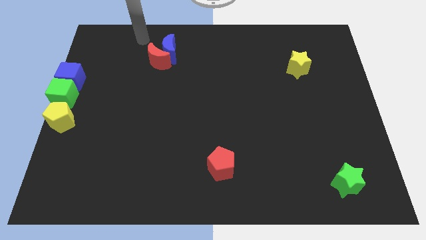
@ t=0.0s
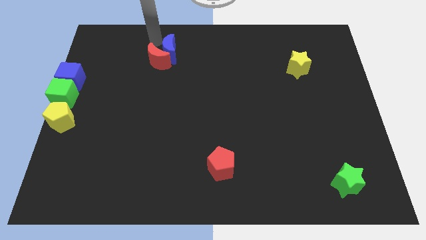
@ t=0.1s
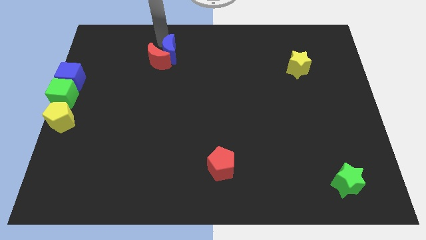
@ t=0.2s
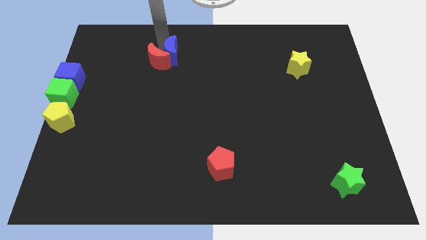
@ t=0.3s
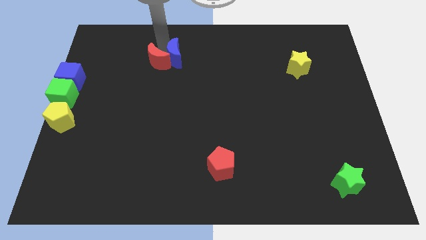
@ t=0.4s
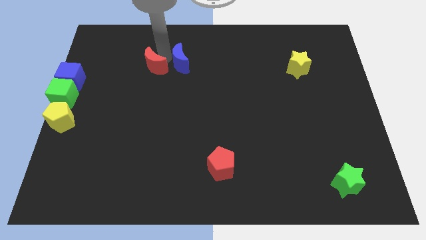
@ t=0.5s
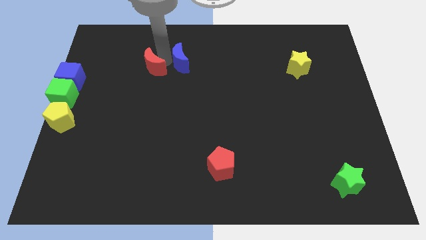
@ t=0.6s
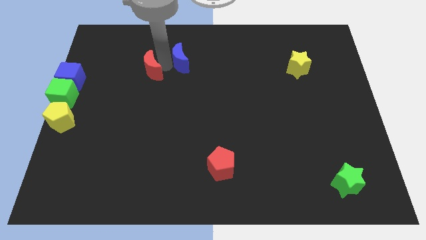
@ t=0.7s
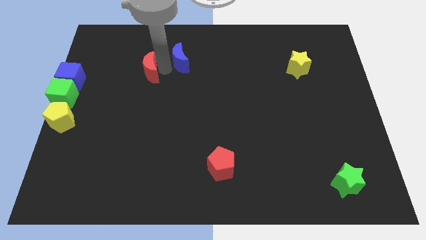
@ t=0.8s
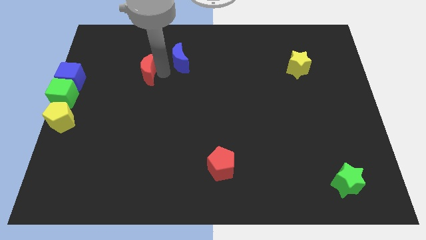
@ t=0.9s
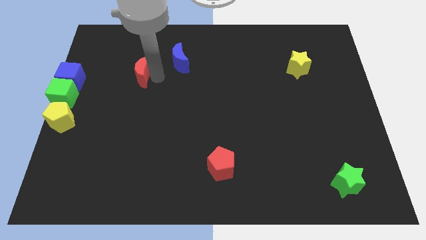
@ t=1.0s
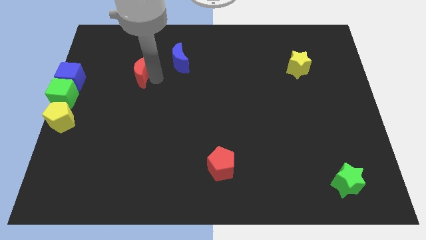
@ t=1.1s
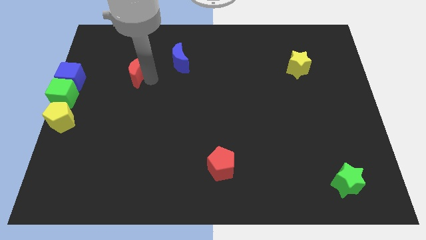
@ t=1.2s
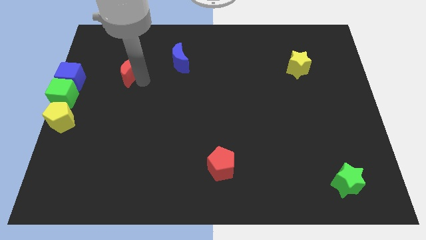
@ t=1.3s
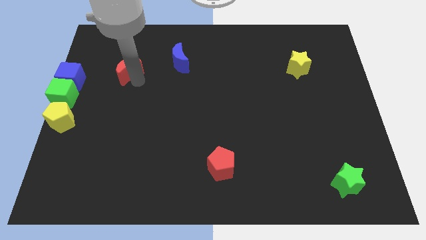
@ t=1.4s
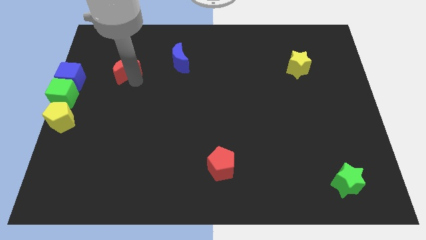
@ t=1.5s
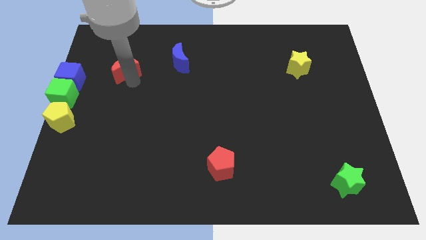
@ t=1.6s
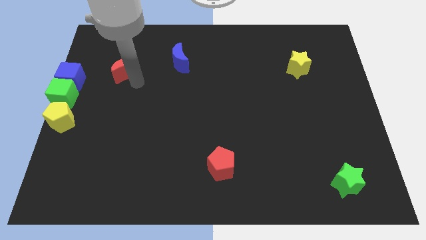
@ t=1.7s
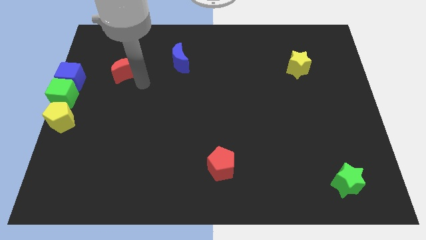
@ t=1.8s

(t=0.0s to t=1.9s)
separate red crescent from blue crescent

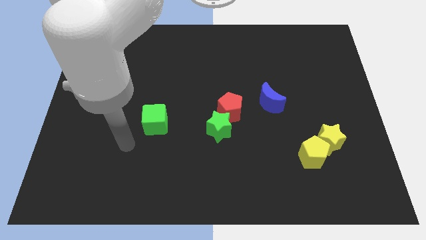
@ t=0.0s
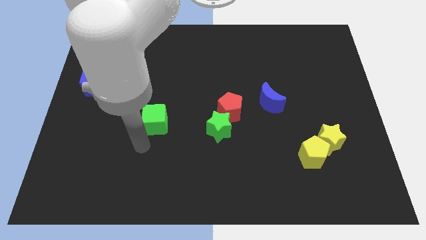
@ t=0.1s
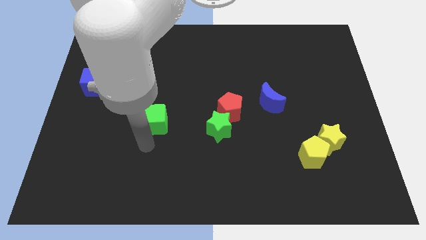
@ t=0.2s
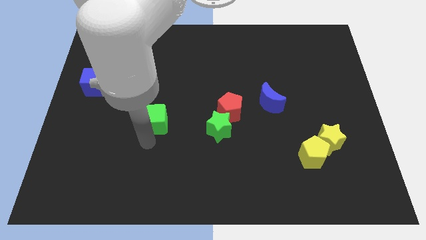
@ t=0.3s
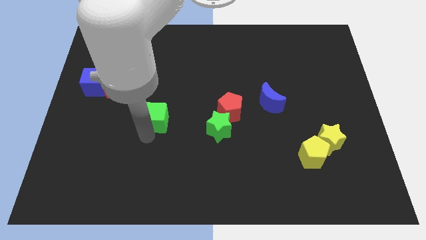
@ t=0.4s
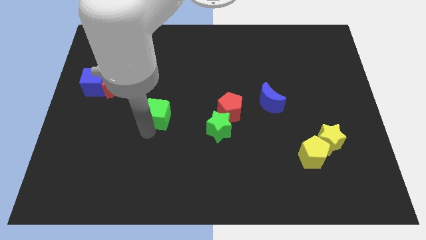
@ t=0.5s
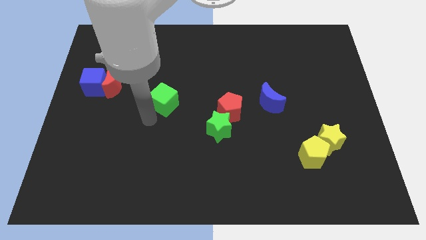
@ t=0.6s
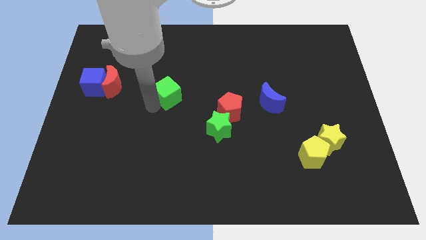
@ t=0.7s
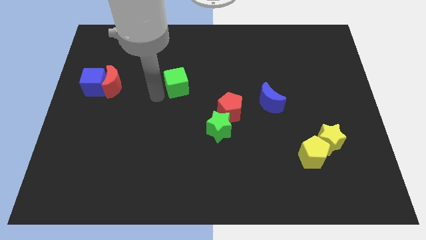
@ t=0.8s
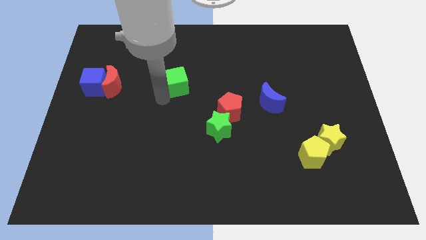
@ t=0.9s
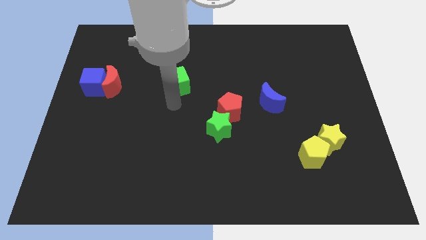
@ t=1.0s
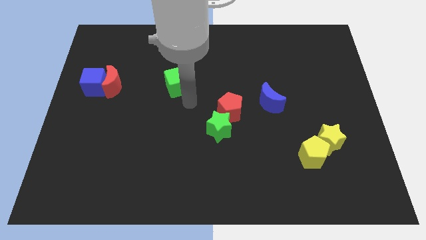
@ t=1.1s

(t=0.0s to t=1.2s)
push the green cube to the horizontal right of the red moon

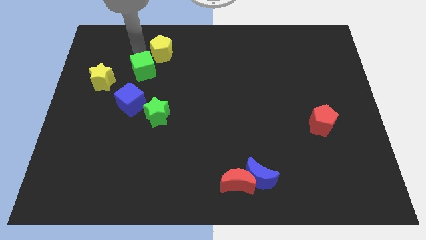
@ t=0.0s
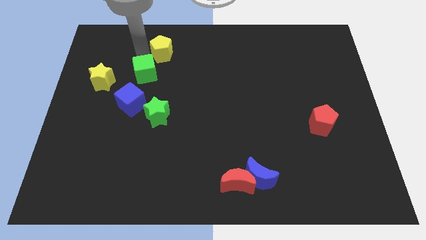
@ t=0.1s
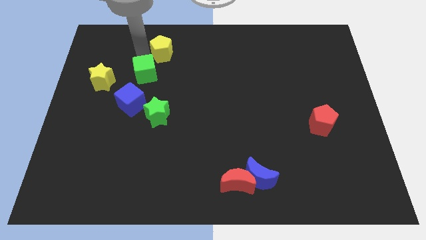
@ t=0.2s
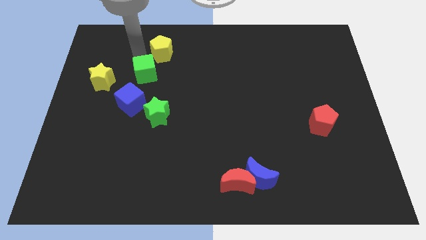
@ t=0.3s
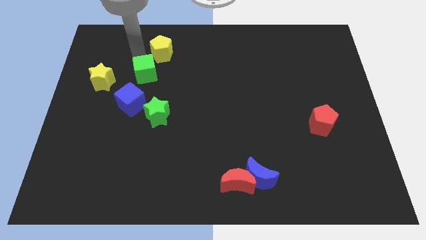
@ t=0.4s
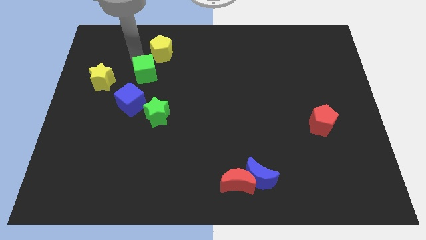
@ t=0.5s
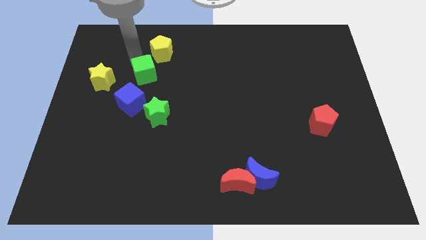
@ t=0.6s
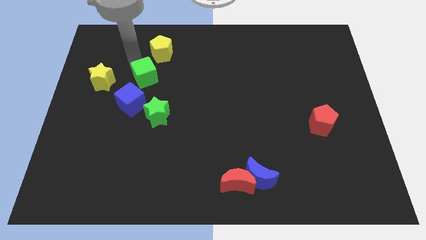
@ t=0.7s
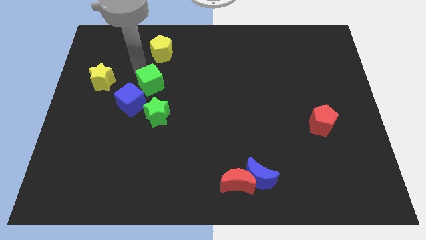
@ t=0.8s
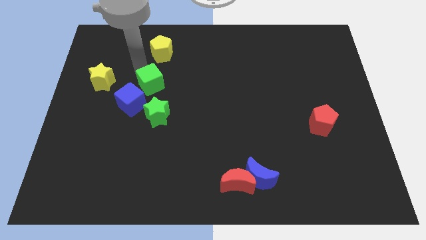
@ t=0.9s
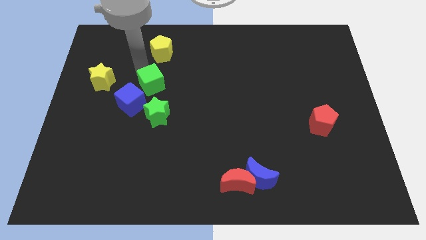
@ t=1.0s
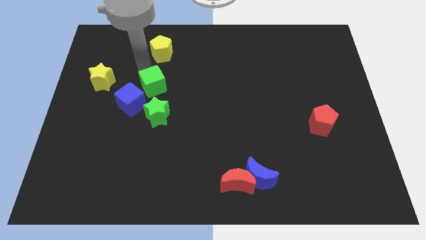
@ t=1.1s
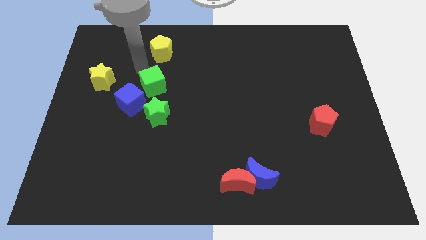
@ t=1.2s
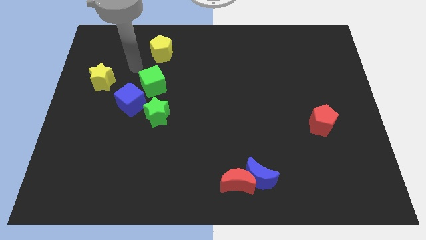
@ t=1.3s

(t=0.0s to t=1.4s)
place the green cube right to the blue cube

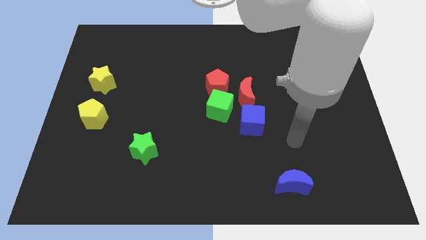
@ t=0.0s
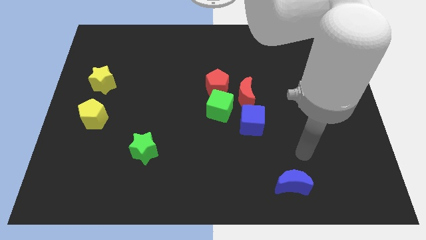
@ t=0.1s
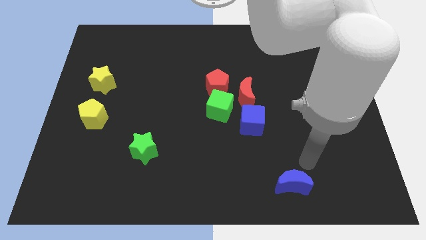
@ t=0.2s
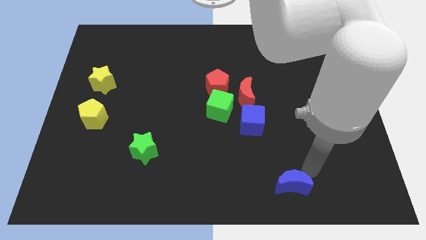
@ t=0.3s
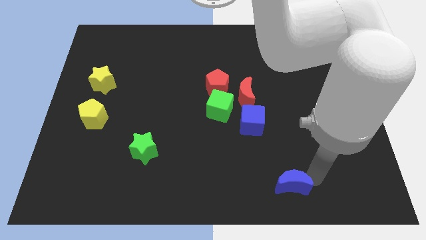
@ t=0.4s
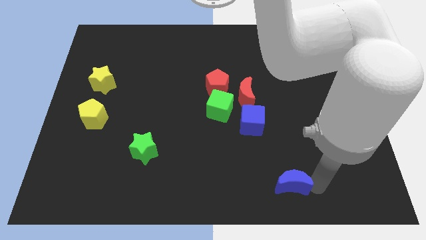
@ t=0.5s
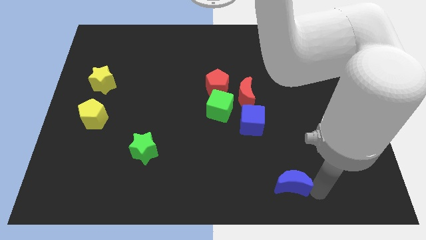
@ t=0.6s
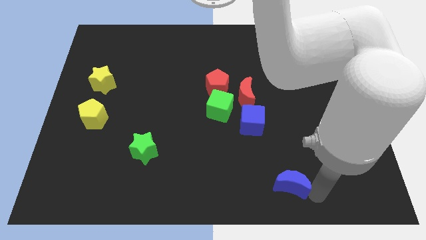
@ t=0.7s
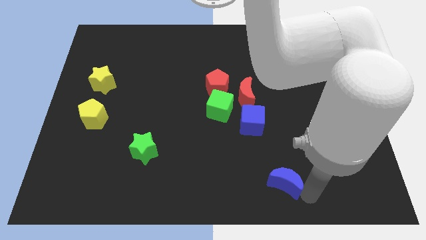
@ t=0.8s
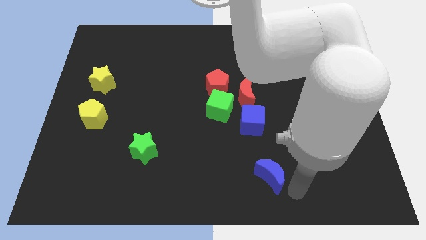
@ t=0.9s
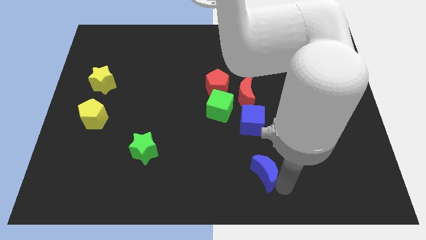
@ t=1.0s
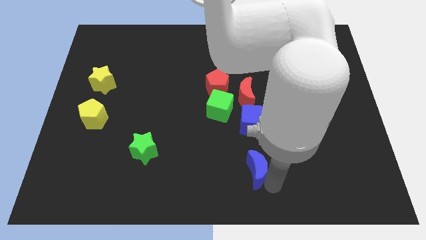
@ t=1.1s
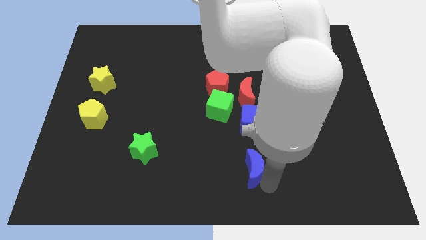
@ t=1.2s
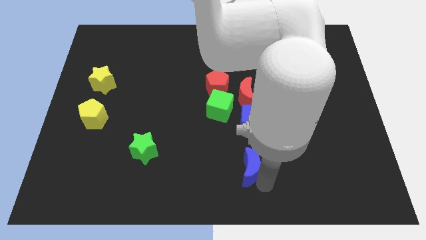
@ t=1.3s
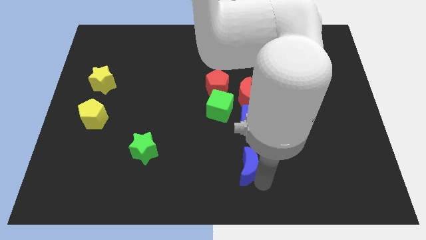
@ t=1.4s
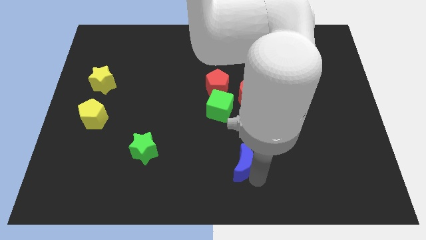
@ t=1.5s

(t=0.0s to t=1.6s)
drag the blue moon towards the bottom side of the blue cube

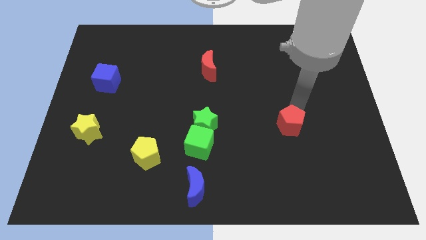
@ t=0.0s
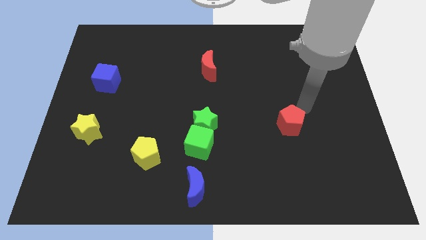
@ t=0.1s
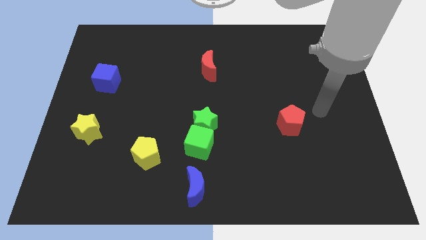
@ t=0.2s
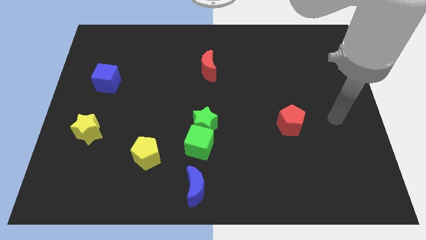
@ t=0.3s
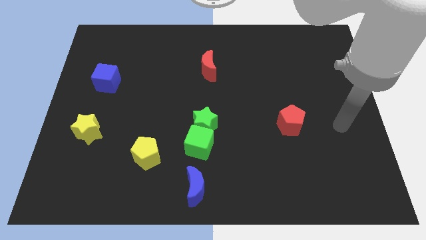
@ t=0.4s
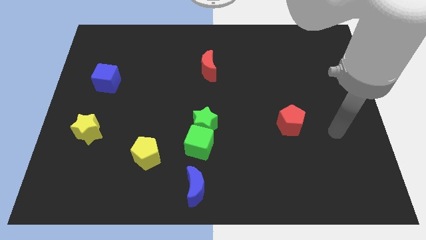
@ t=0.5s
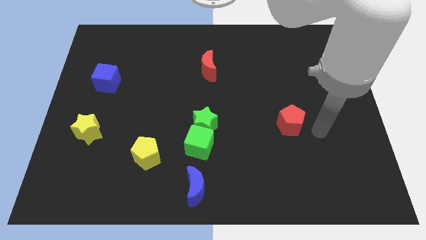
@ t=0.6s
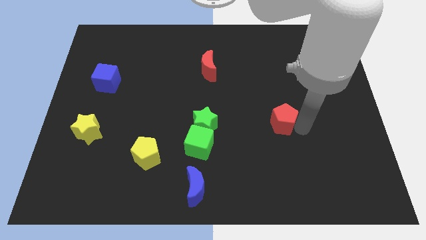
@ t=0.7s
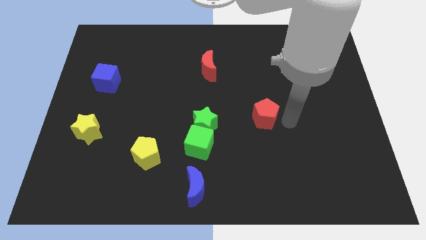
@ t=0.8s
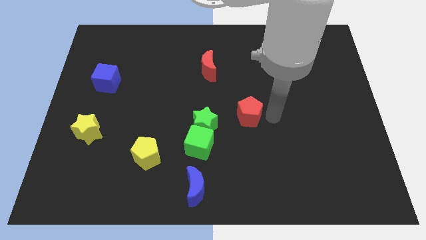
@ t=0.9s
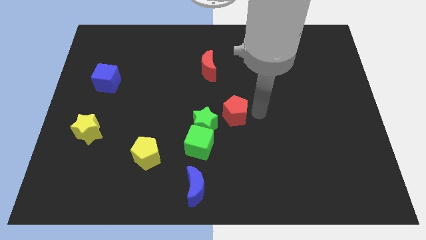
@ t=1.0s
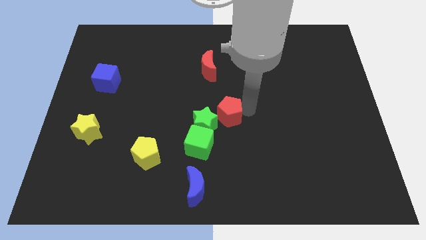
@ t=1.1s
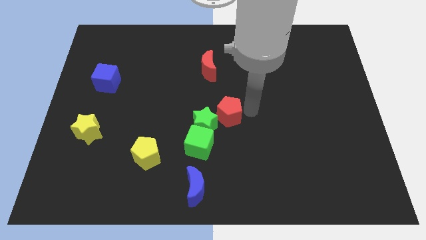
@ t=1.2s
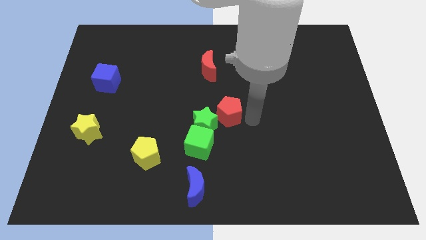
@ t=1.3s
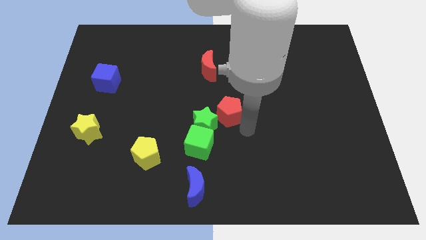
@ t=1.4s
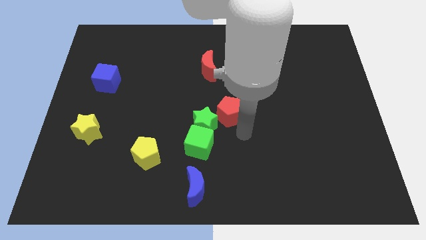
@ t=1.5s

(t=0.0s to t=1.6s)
place red pentagon close to the green star

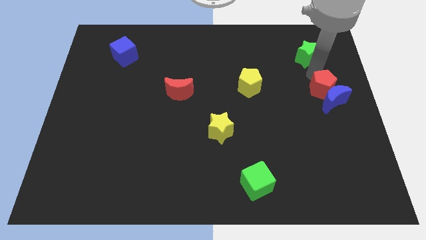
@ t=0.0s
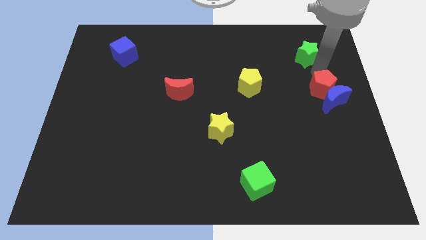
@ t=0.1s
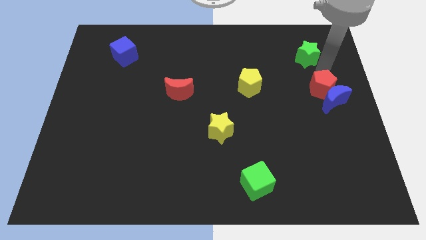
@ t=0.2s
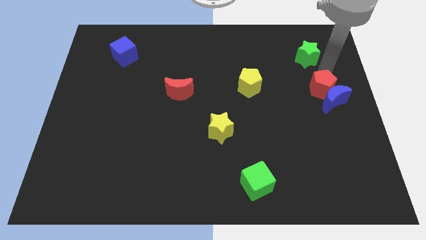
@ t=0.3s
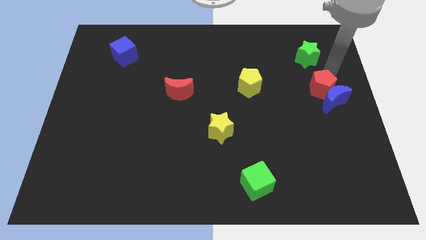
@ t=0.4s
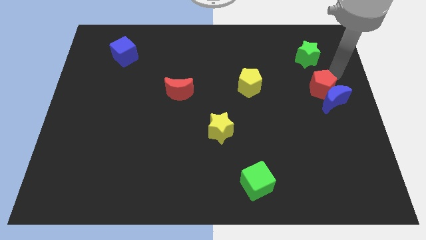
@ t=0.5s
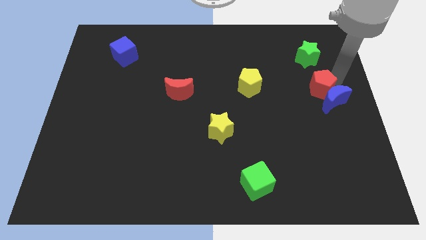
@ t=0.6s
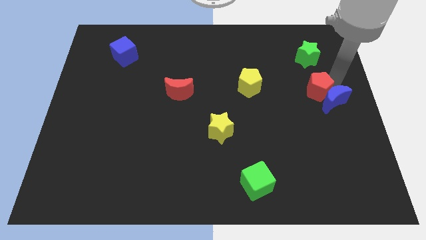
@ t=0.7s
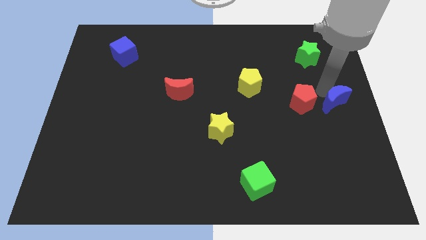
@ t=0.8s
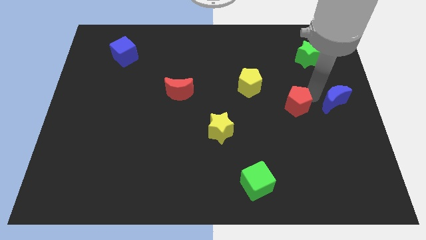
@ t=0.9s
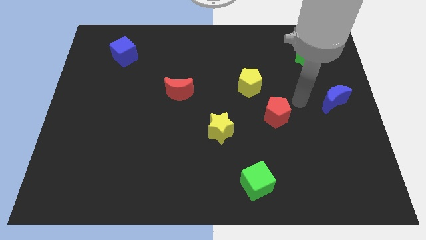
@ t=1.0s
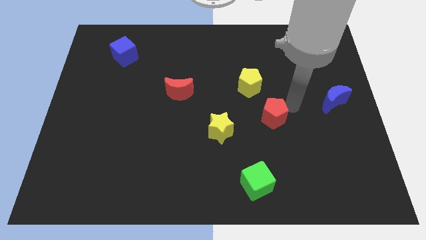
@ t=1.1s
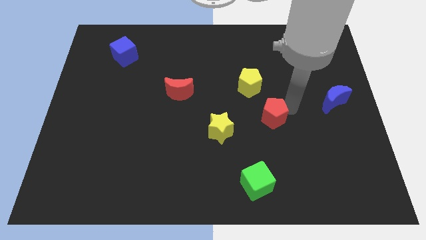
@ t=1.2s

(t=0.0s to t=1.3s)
separate the red pentagon from the blue moon
